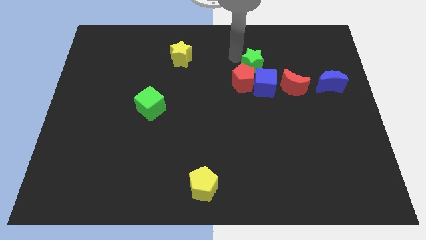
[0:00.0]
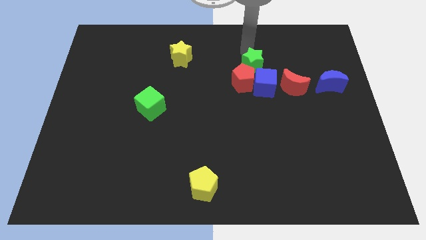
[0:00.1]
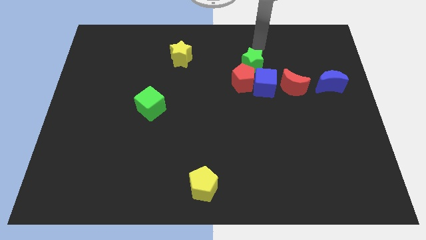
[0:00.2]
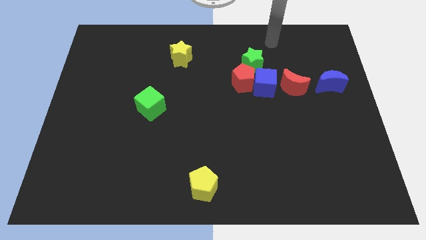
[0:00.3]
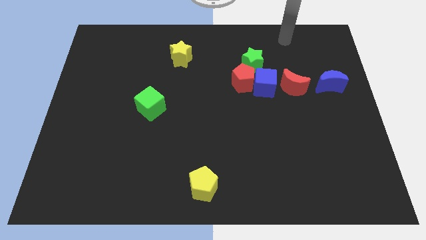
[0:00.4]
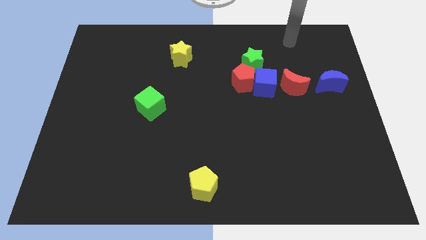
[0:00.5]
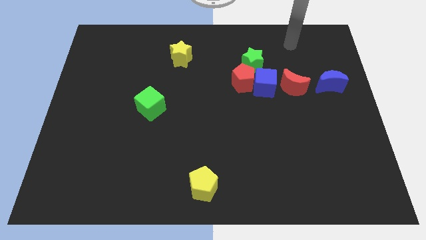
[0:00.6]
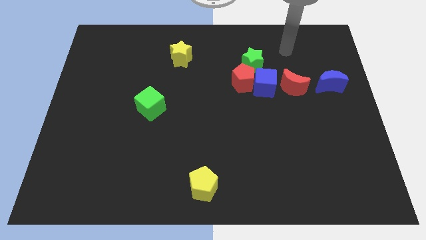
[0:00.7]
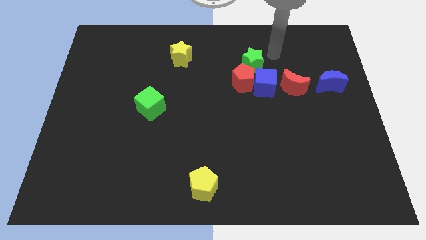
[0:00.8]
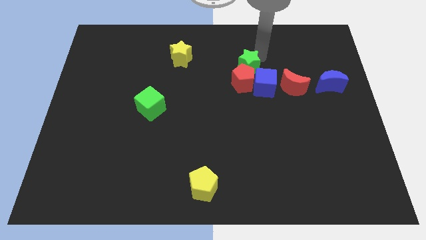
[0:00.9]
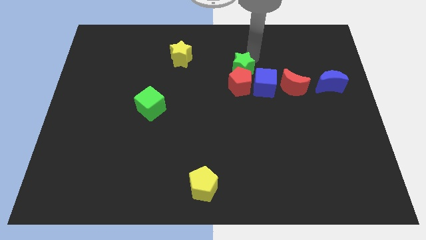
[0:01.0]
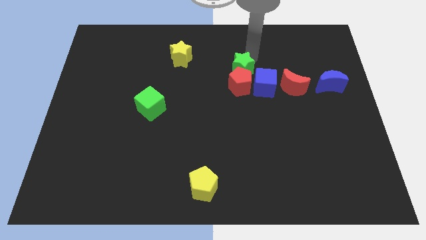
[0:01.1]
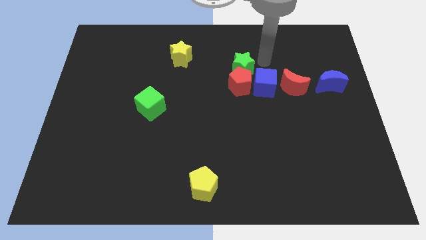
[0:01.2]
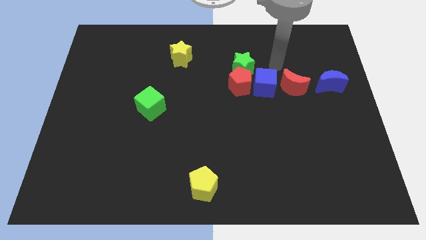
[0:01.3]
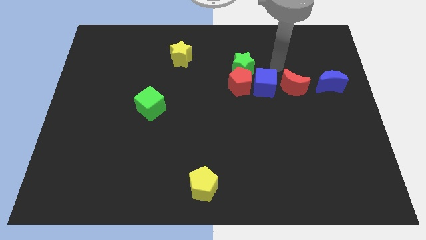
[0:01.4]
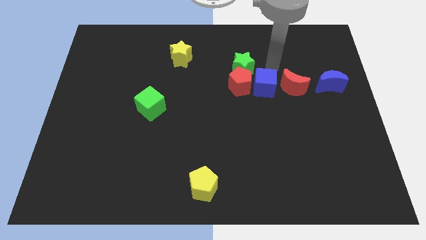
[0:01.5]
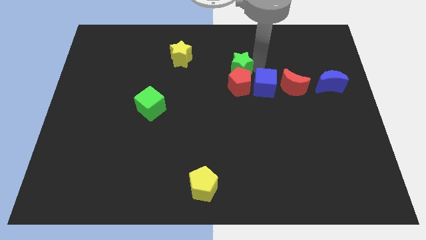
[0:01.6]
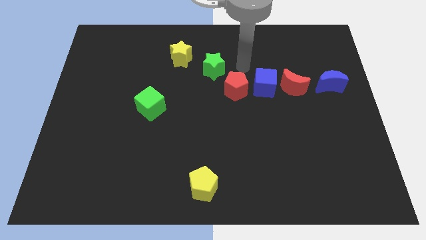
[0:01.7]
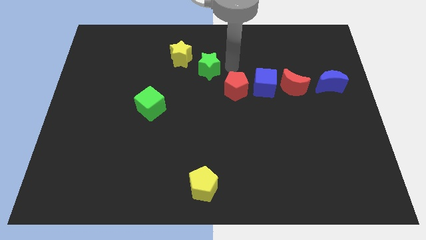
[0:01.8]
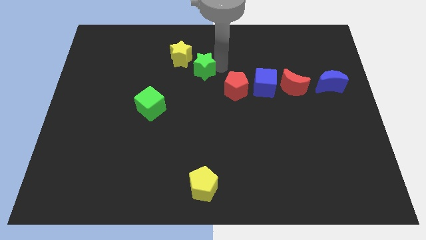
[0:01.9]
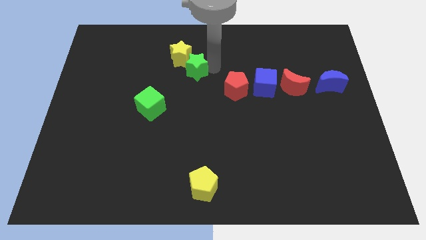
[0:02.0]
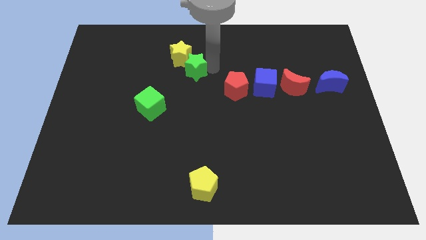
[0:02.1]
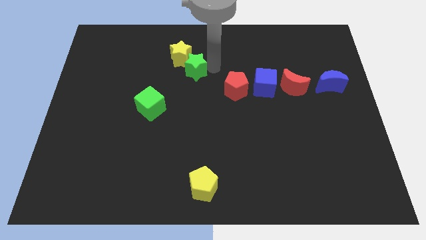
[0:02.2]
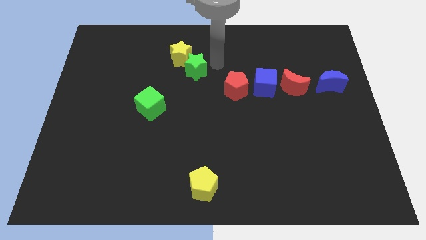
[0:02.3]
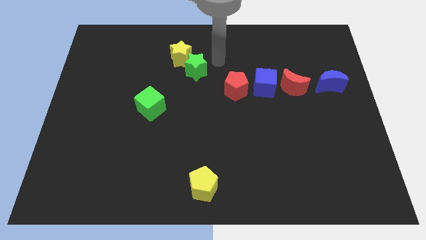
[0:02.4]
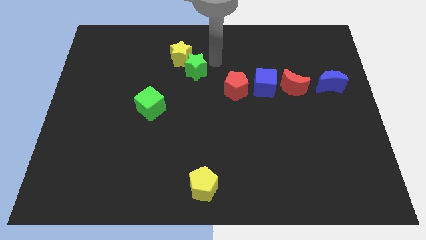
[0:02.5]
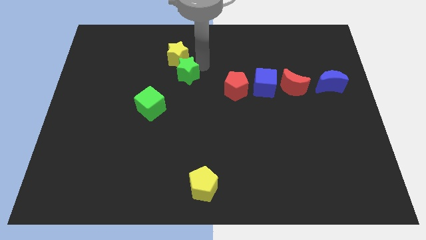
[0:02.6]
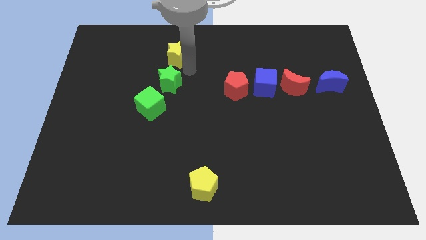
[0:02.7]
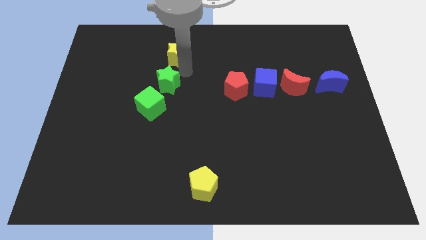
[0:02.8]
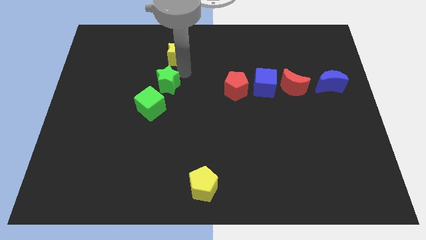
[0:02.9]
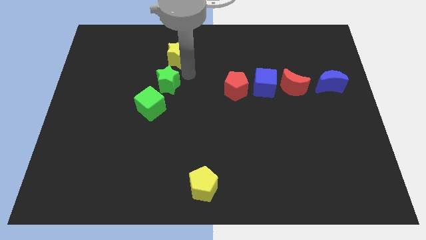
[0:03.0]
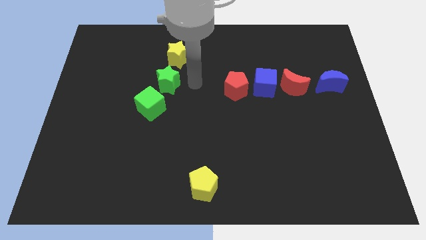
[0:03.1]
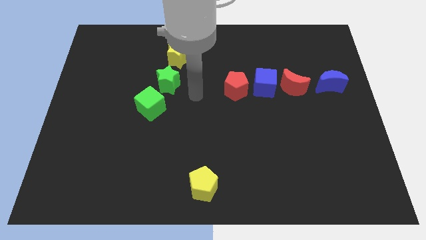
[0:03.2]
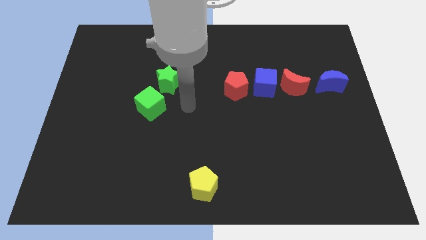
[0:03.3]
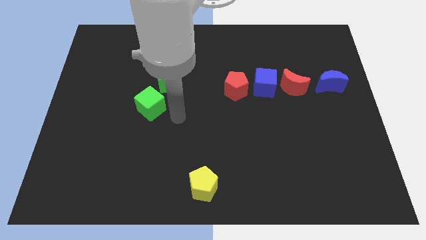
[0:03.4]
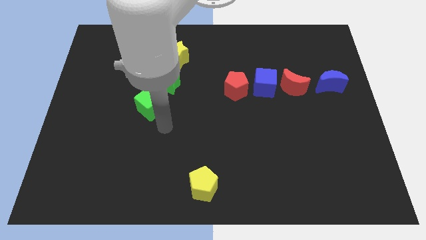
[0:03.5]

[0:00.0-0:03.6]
slide the green star in between the yellow star and the green cube

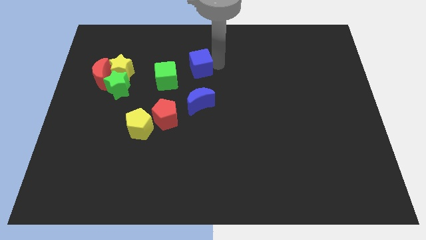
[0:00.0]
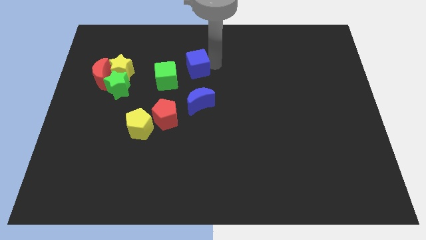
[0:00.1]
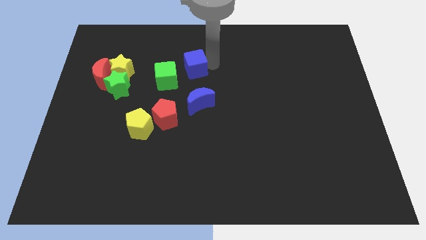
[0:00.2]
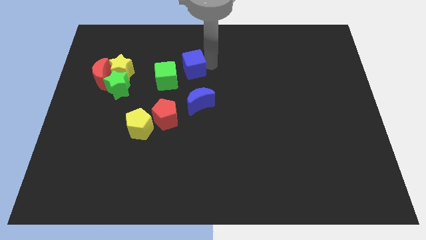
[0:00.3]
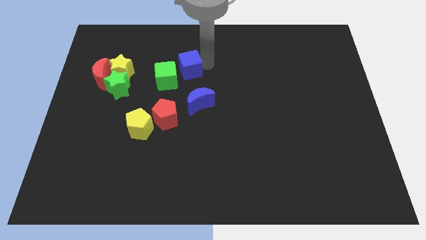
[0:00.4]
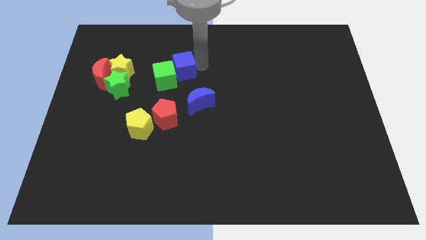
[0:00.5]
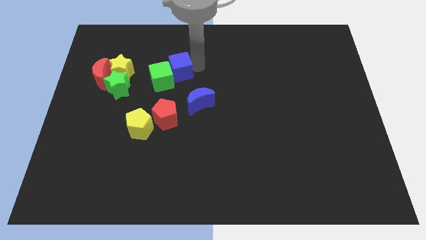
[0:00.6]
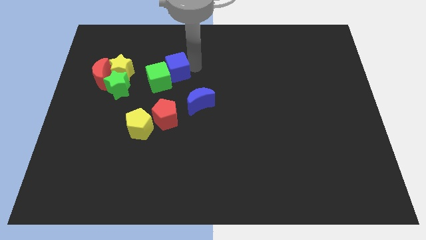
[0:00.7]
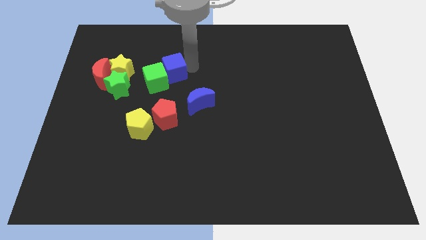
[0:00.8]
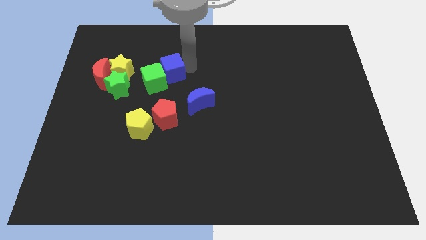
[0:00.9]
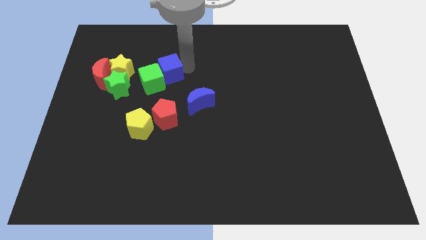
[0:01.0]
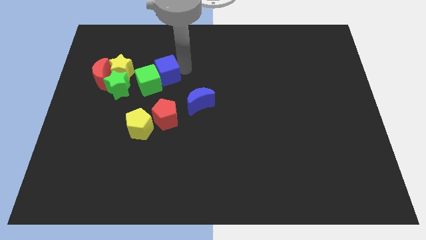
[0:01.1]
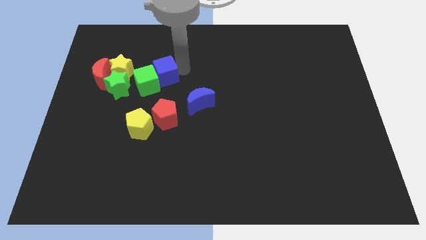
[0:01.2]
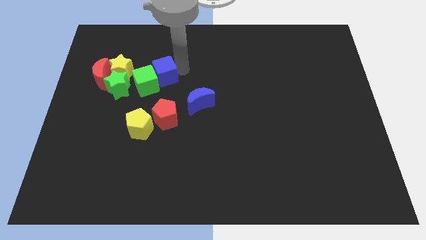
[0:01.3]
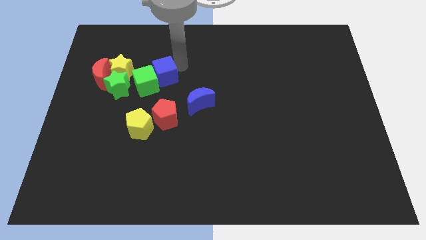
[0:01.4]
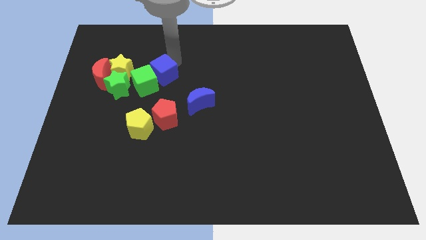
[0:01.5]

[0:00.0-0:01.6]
push the blue cube into the green cube

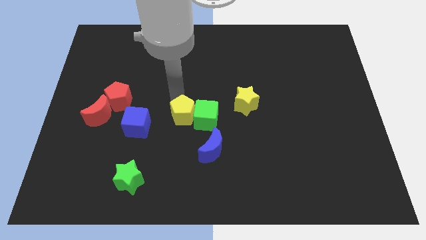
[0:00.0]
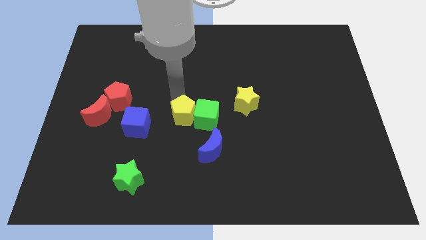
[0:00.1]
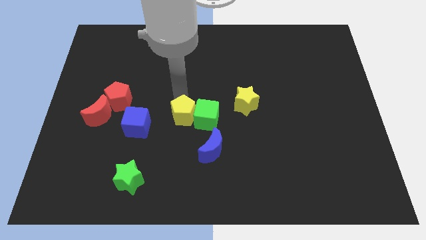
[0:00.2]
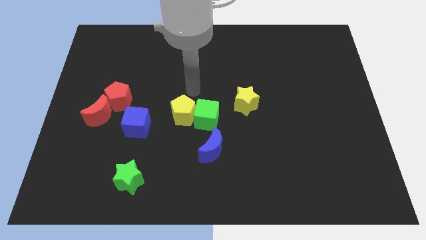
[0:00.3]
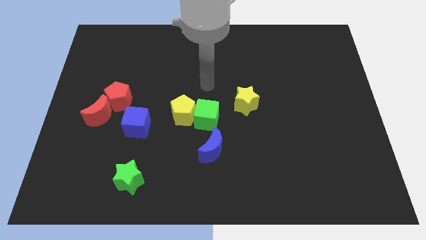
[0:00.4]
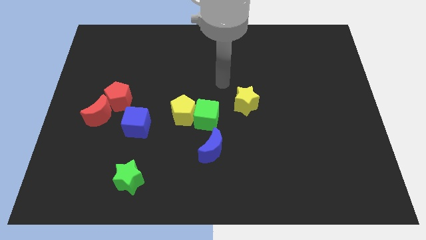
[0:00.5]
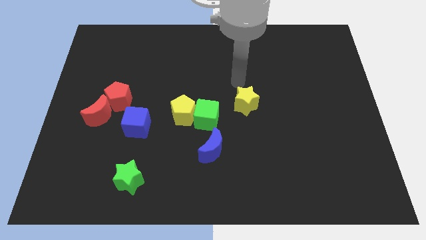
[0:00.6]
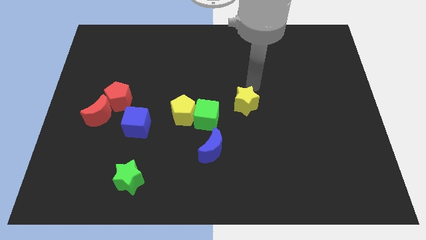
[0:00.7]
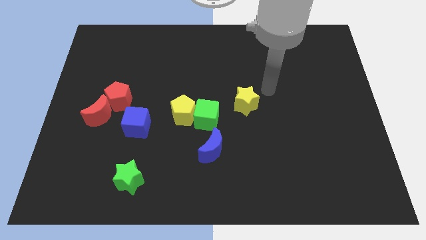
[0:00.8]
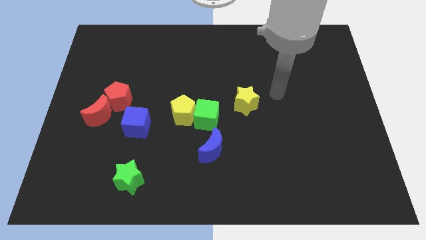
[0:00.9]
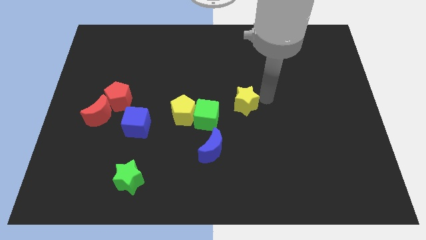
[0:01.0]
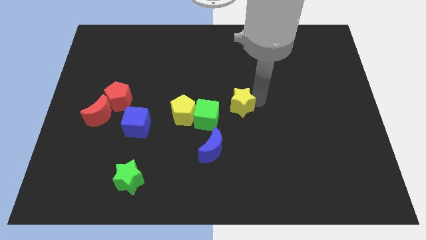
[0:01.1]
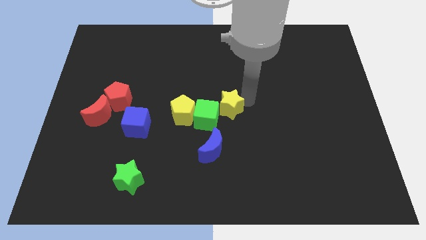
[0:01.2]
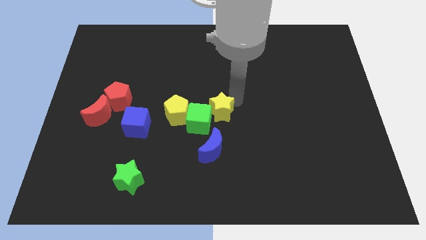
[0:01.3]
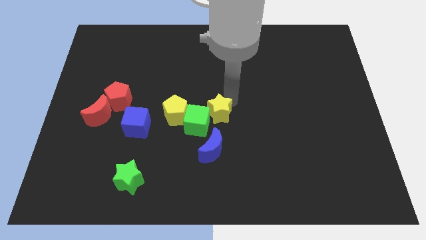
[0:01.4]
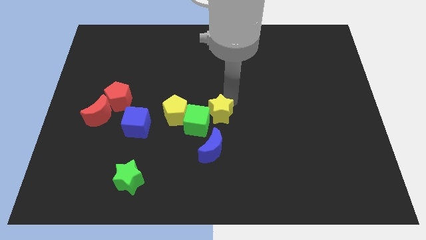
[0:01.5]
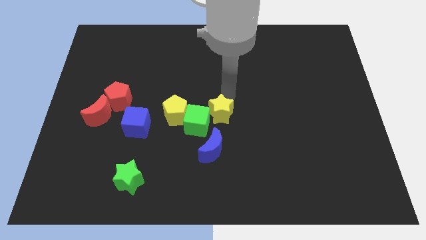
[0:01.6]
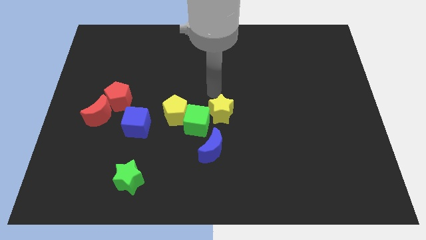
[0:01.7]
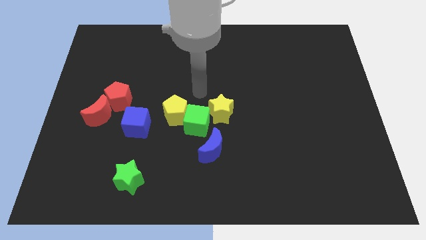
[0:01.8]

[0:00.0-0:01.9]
place the yellow star close to the green cube

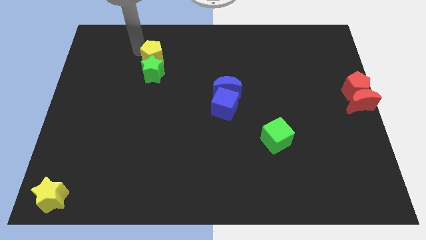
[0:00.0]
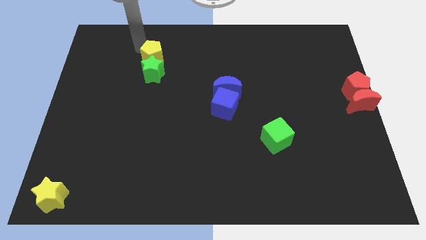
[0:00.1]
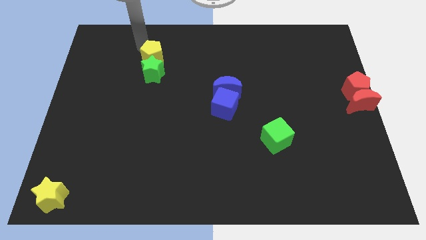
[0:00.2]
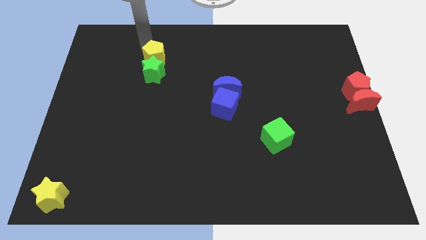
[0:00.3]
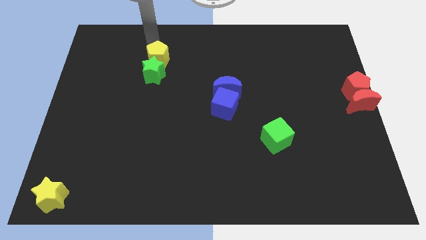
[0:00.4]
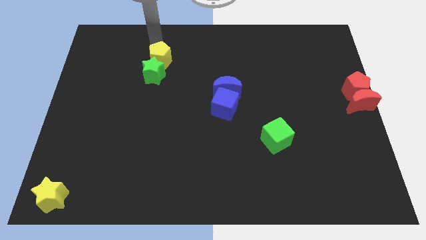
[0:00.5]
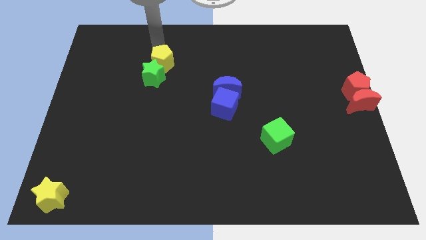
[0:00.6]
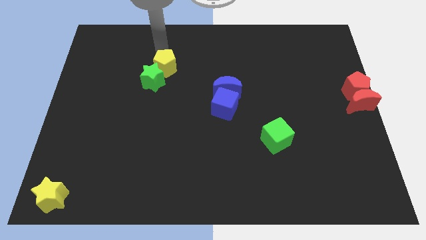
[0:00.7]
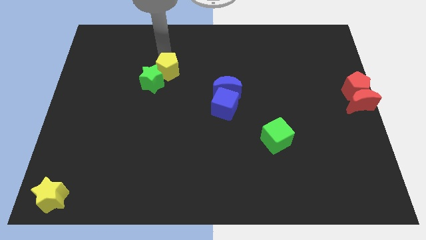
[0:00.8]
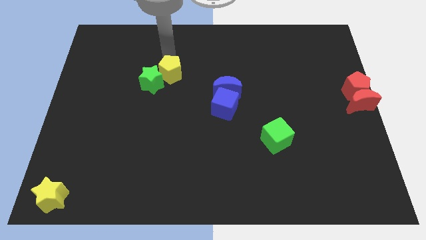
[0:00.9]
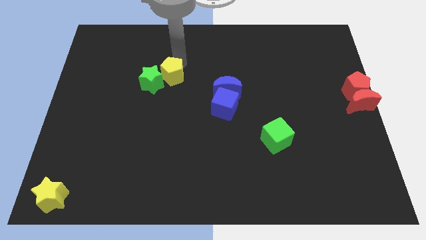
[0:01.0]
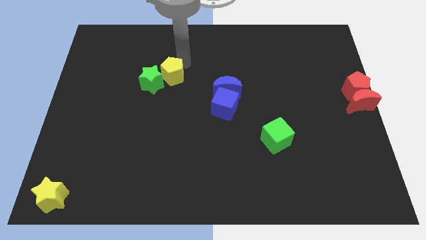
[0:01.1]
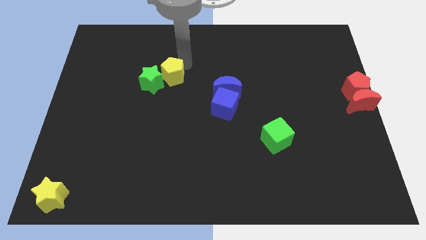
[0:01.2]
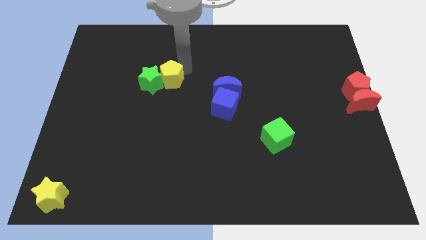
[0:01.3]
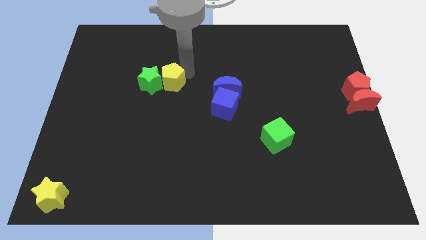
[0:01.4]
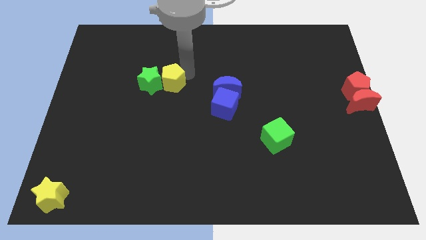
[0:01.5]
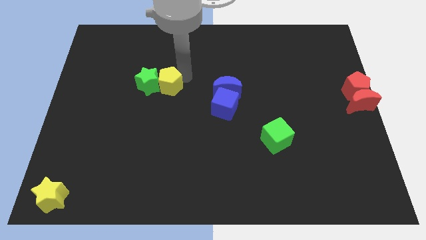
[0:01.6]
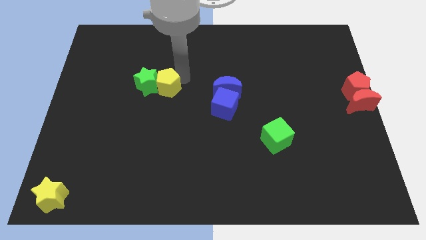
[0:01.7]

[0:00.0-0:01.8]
move the yellow pentagon along with the green star downwards
